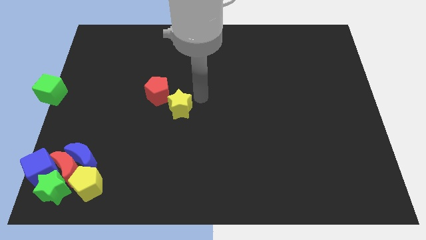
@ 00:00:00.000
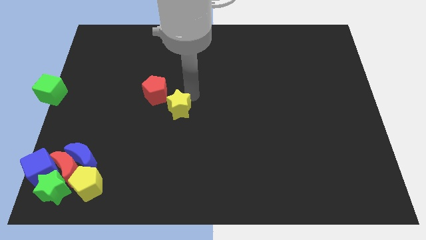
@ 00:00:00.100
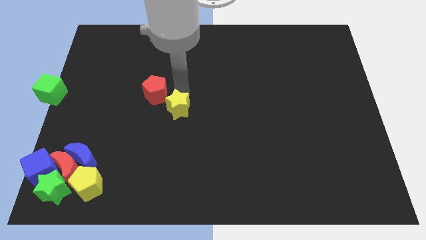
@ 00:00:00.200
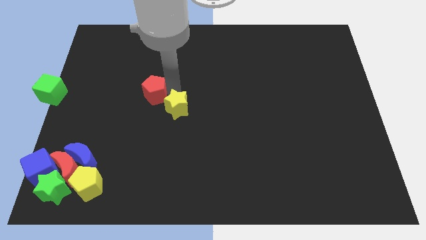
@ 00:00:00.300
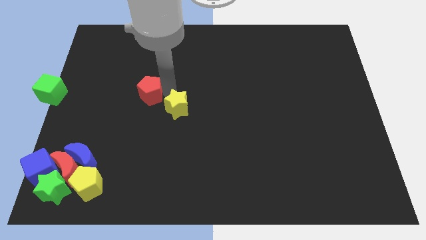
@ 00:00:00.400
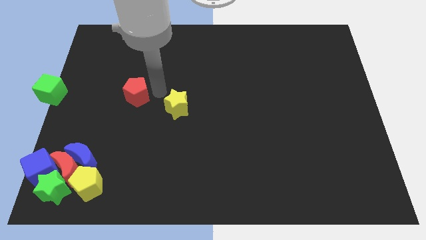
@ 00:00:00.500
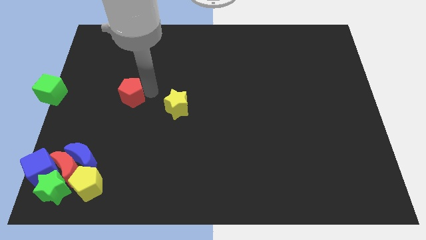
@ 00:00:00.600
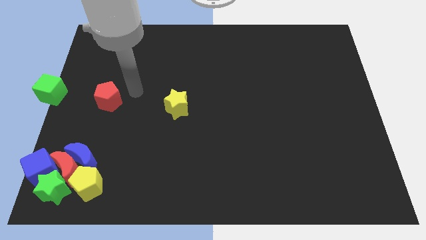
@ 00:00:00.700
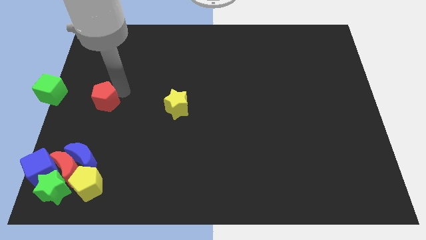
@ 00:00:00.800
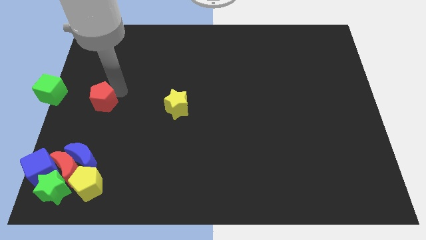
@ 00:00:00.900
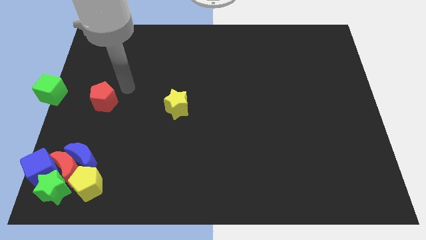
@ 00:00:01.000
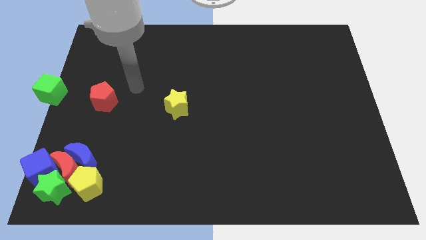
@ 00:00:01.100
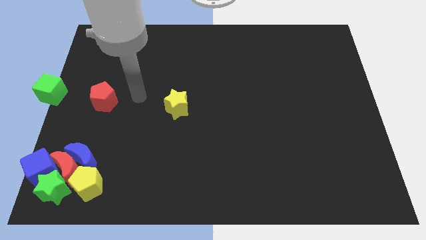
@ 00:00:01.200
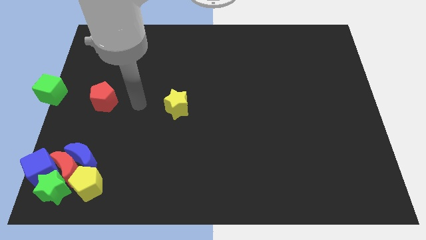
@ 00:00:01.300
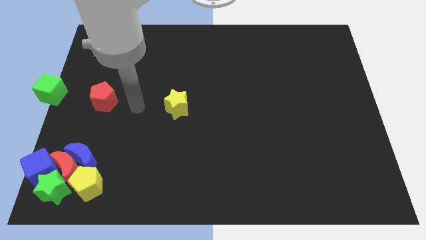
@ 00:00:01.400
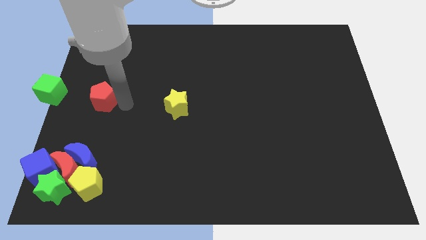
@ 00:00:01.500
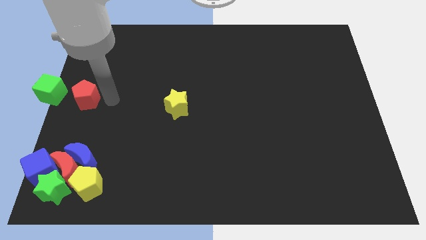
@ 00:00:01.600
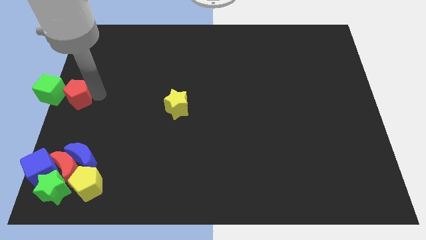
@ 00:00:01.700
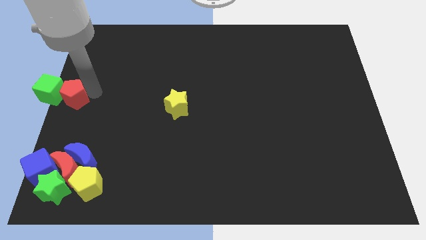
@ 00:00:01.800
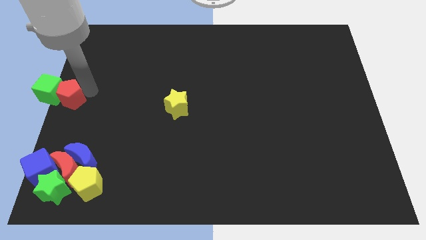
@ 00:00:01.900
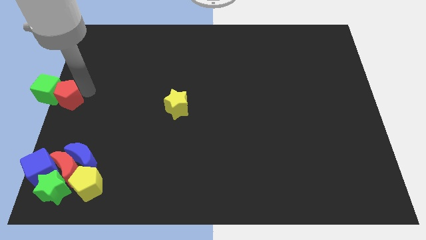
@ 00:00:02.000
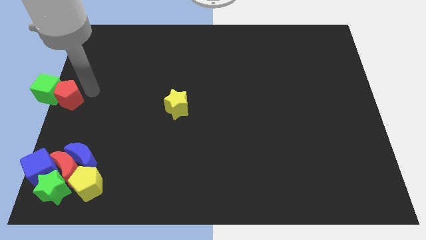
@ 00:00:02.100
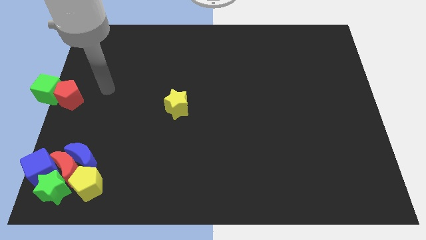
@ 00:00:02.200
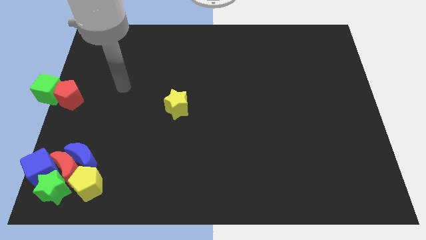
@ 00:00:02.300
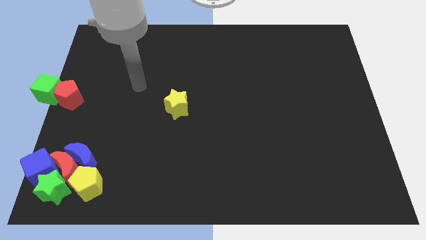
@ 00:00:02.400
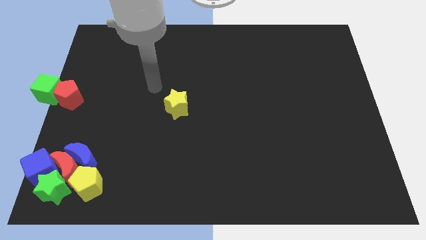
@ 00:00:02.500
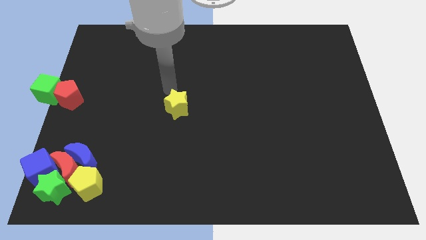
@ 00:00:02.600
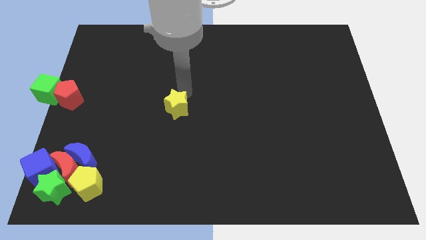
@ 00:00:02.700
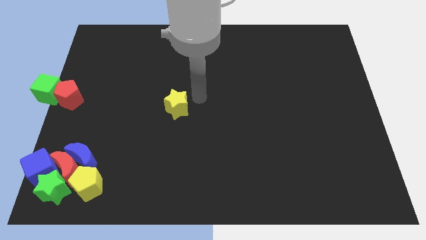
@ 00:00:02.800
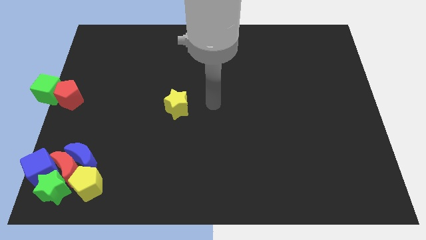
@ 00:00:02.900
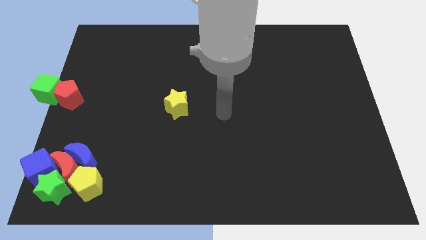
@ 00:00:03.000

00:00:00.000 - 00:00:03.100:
push the red pentagon close to the green cube

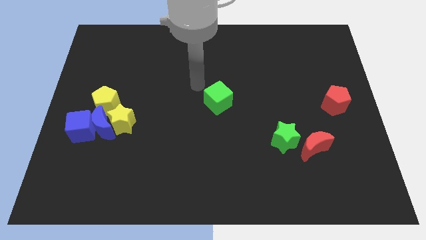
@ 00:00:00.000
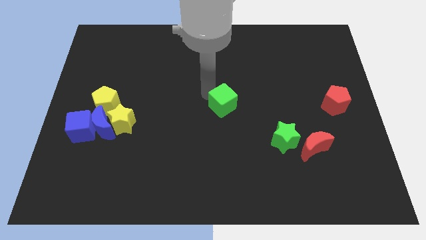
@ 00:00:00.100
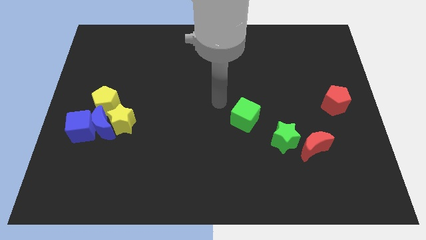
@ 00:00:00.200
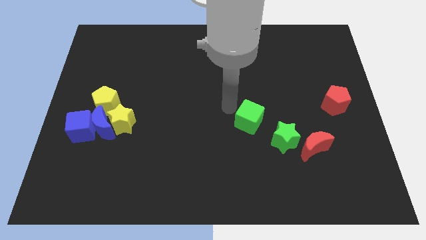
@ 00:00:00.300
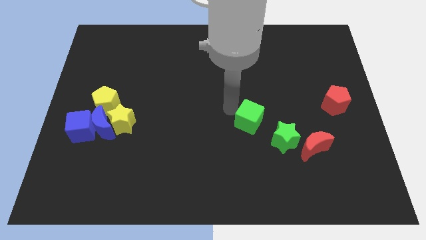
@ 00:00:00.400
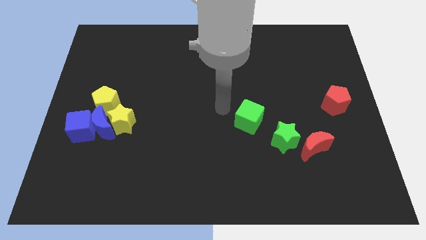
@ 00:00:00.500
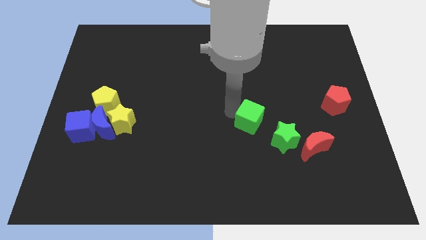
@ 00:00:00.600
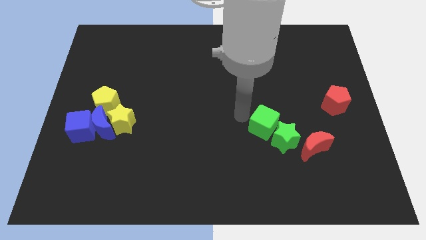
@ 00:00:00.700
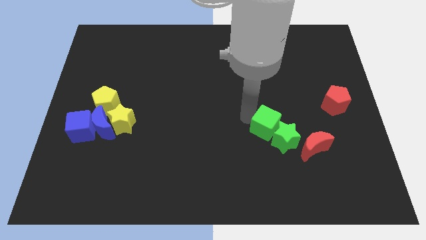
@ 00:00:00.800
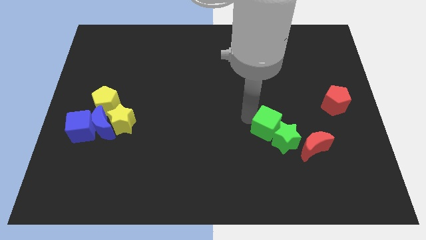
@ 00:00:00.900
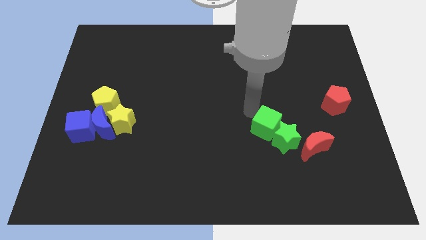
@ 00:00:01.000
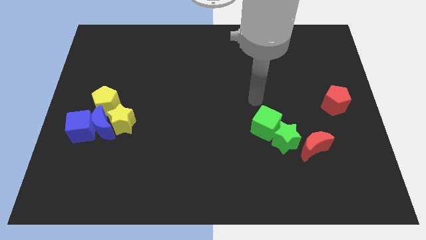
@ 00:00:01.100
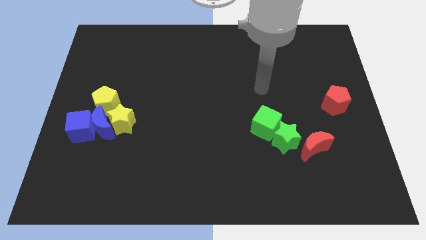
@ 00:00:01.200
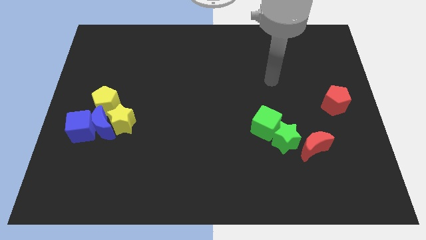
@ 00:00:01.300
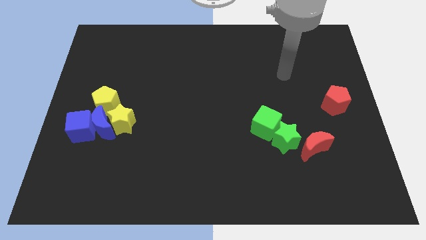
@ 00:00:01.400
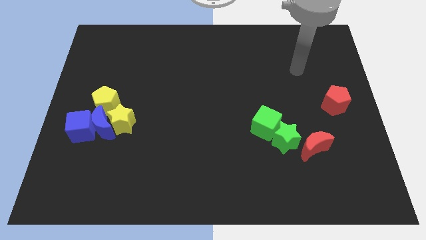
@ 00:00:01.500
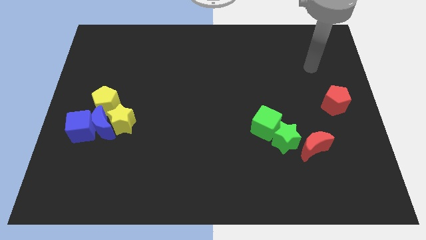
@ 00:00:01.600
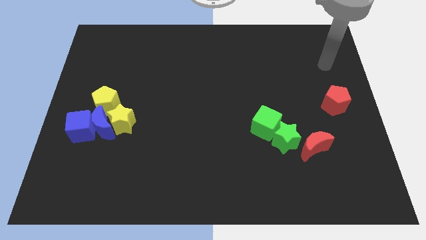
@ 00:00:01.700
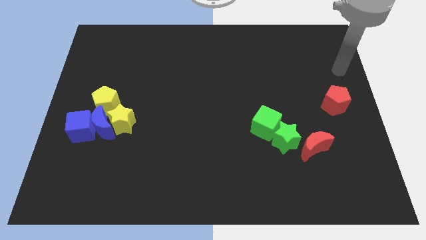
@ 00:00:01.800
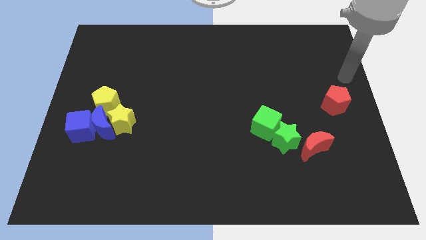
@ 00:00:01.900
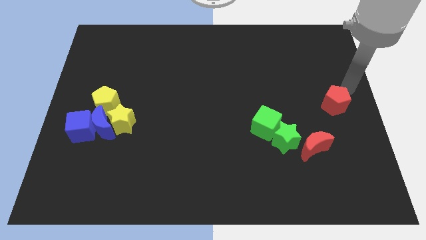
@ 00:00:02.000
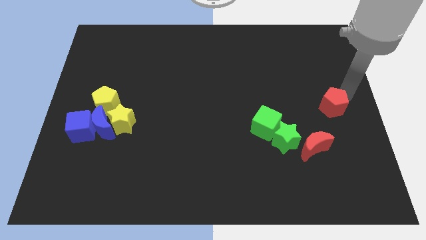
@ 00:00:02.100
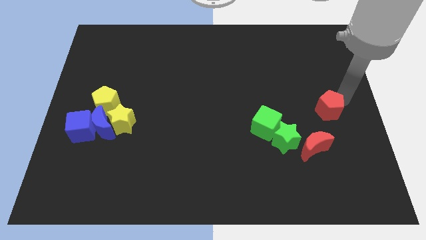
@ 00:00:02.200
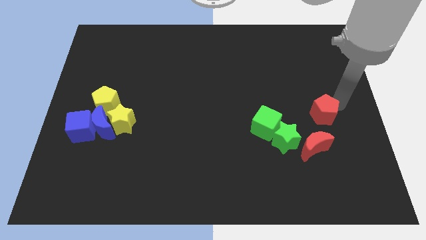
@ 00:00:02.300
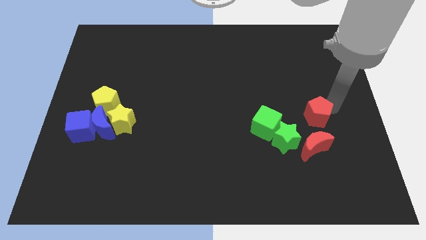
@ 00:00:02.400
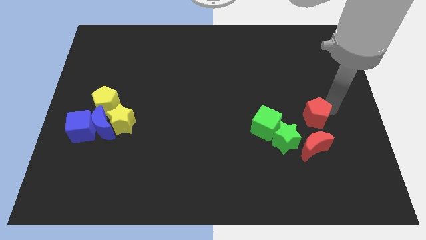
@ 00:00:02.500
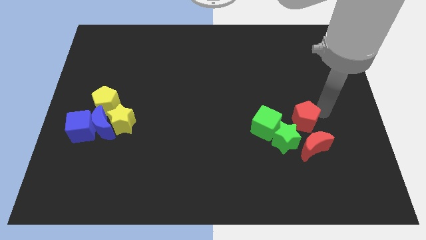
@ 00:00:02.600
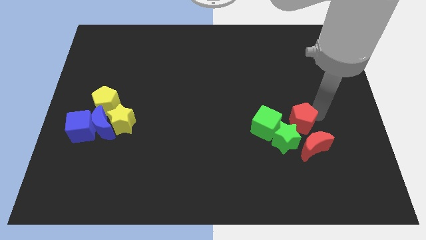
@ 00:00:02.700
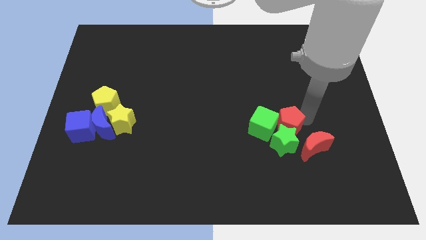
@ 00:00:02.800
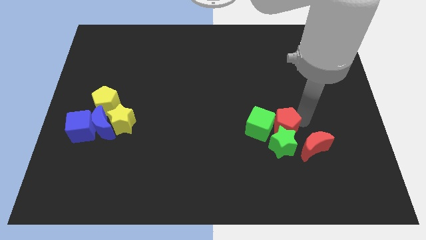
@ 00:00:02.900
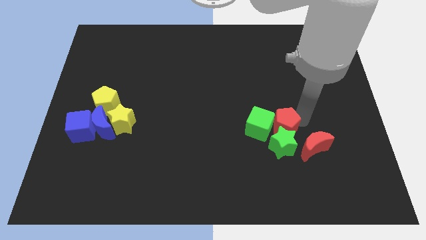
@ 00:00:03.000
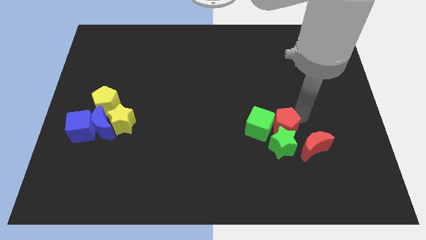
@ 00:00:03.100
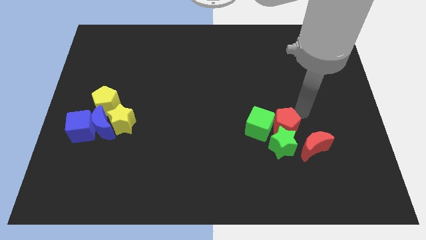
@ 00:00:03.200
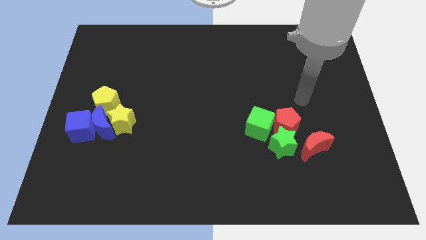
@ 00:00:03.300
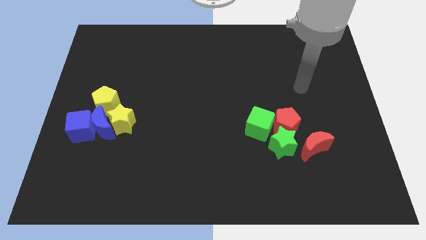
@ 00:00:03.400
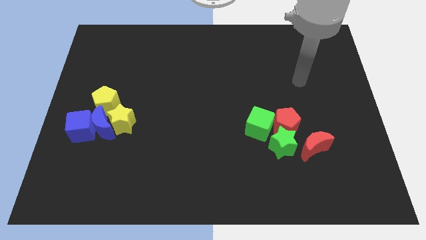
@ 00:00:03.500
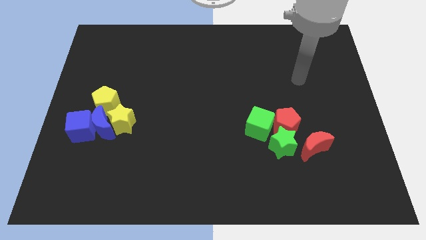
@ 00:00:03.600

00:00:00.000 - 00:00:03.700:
push the green cube and the red pentagon into the green star

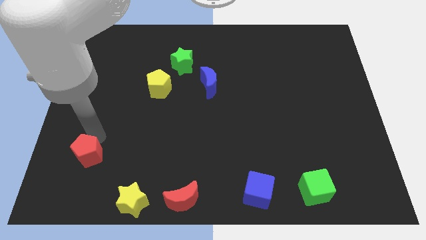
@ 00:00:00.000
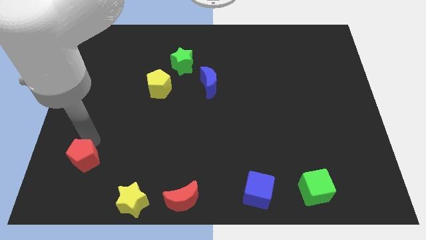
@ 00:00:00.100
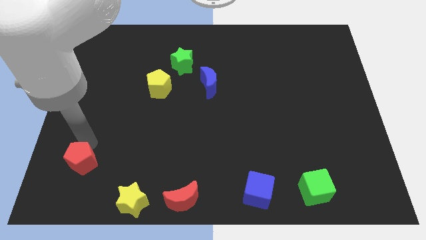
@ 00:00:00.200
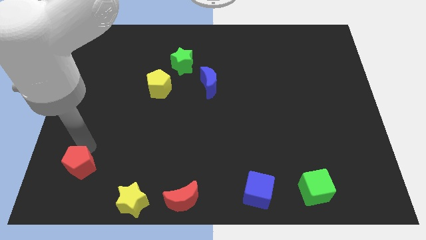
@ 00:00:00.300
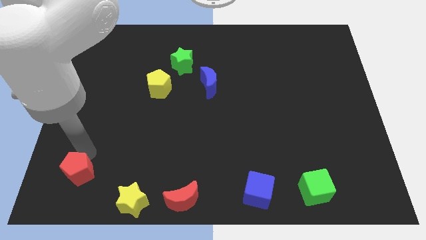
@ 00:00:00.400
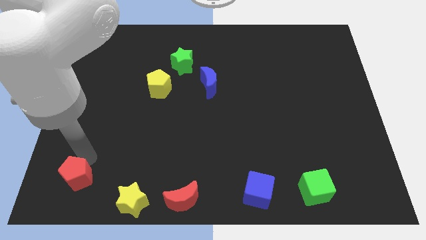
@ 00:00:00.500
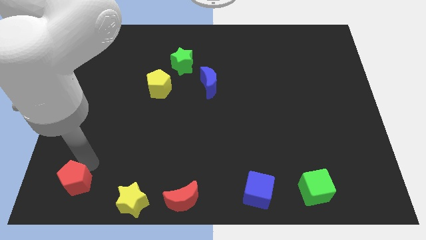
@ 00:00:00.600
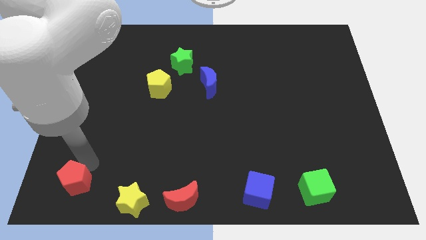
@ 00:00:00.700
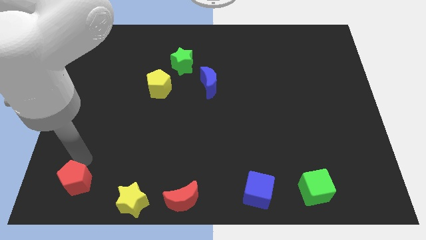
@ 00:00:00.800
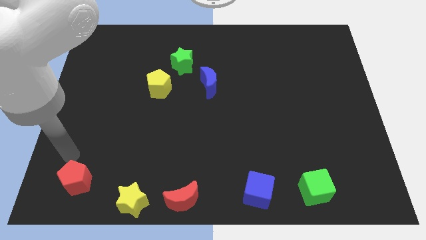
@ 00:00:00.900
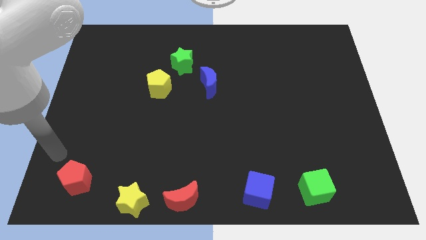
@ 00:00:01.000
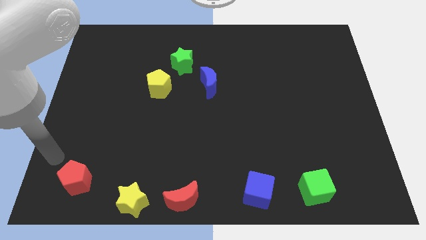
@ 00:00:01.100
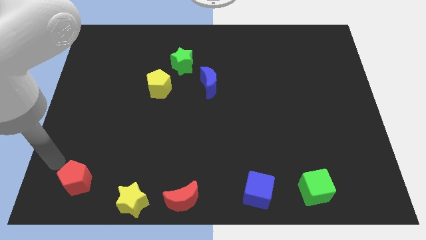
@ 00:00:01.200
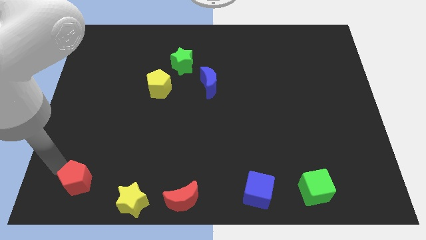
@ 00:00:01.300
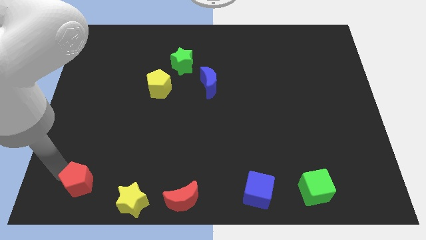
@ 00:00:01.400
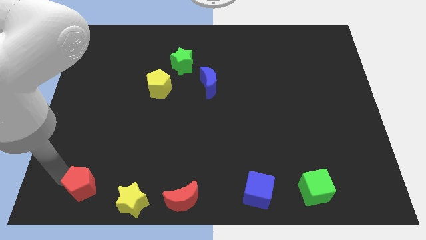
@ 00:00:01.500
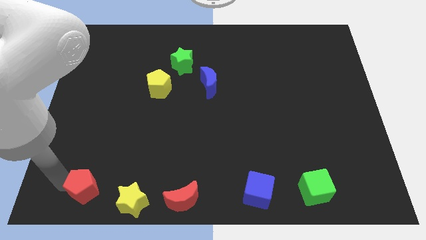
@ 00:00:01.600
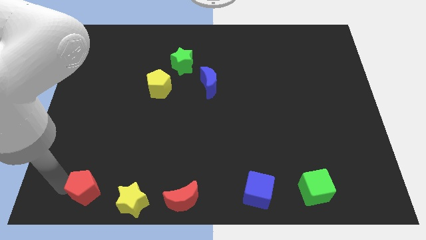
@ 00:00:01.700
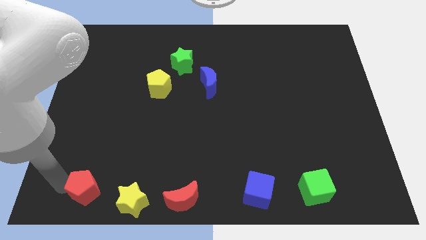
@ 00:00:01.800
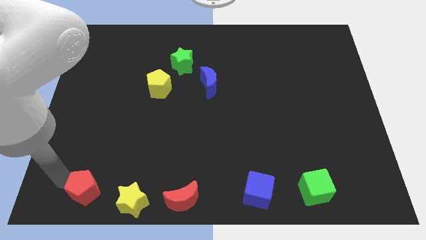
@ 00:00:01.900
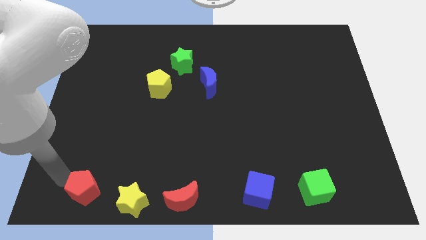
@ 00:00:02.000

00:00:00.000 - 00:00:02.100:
place the red pentagon to the left side of yellow star
